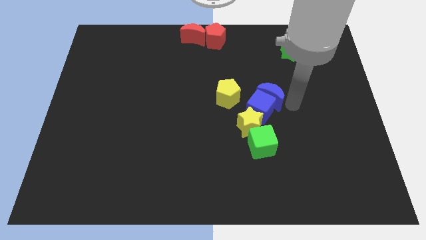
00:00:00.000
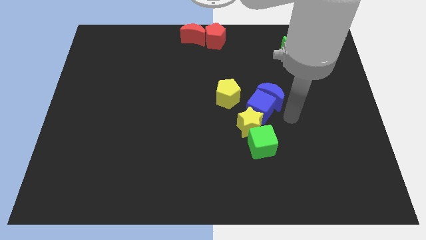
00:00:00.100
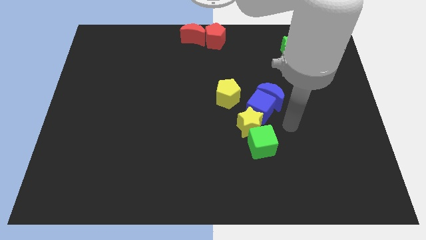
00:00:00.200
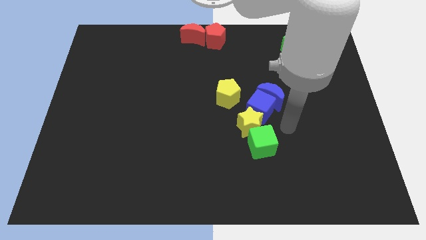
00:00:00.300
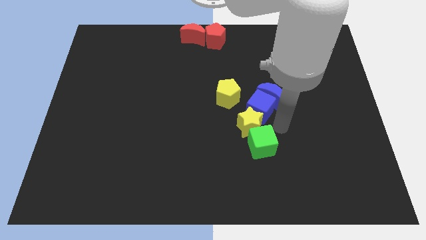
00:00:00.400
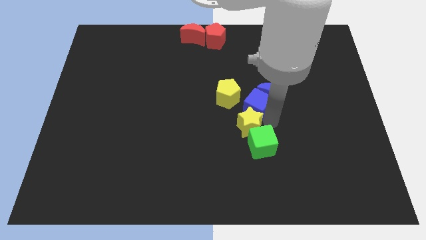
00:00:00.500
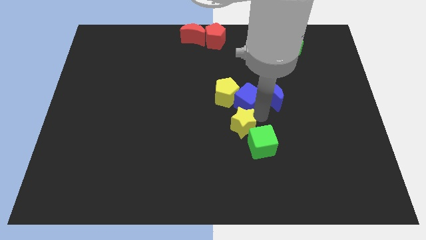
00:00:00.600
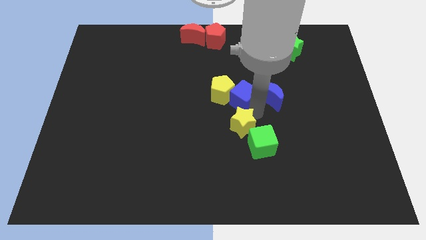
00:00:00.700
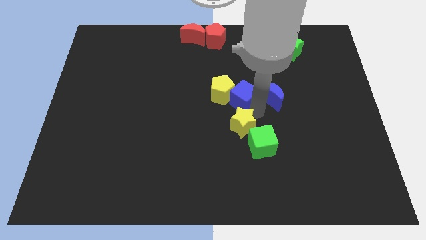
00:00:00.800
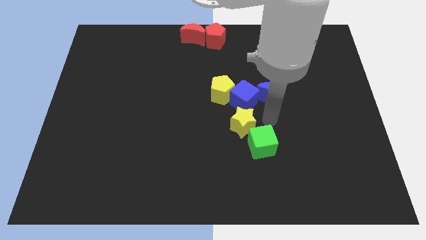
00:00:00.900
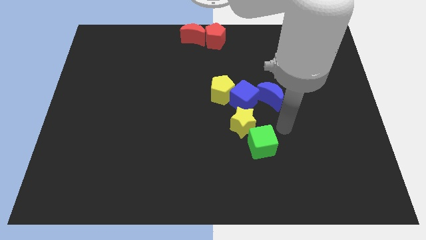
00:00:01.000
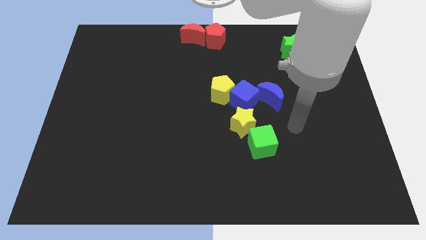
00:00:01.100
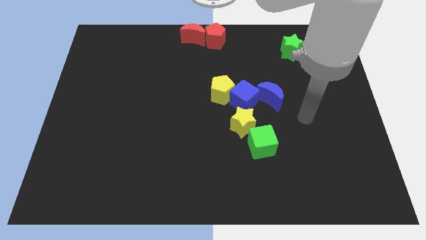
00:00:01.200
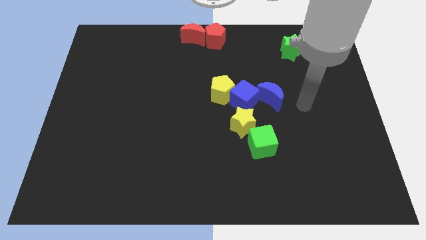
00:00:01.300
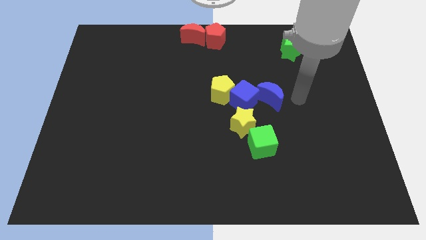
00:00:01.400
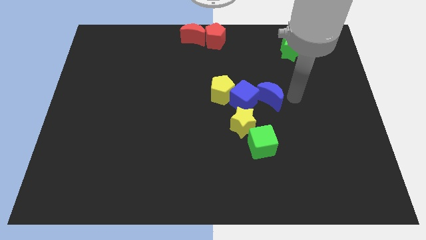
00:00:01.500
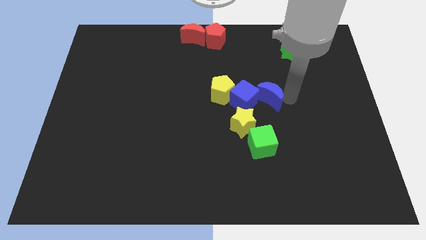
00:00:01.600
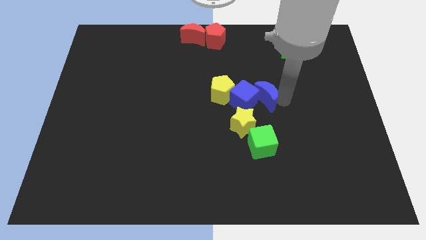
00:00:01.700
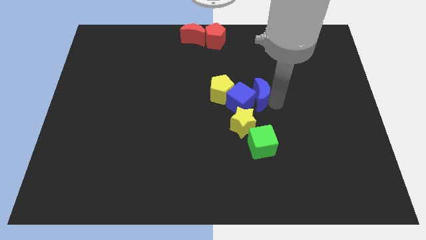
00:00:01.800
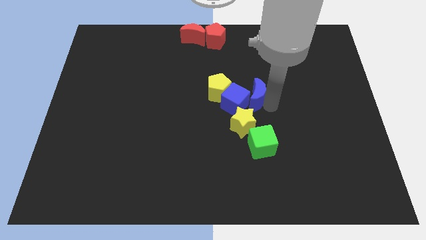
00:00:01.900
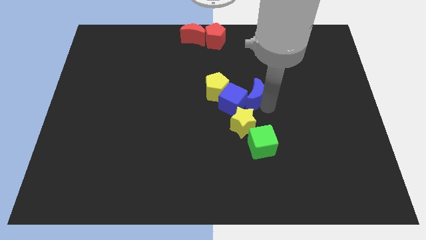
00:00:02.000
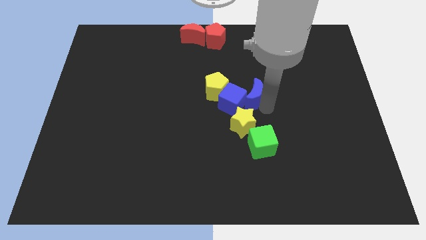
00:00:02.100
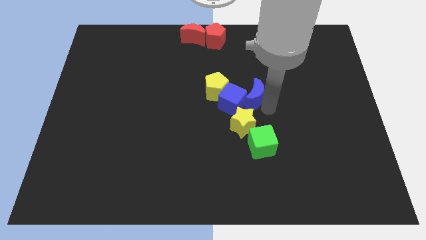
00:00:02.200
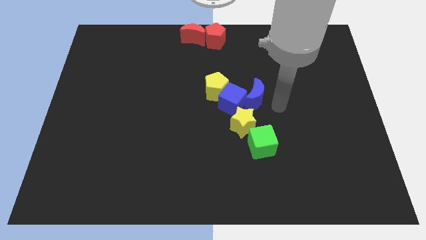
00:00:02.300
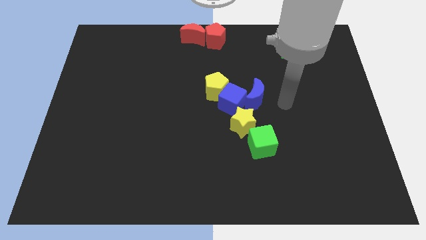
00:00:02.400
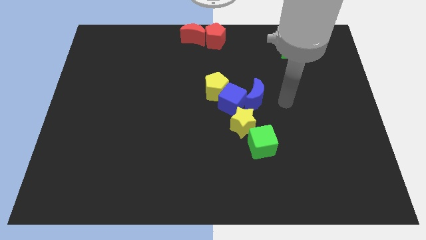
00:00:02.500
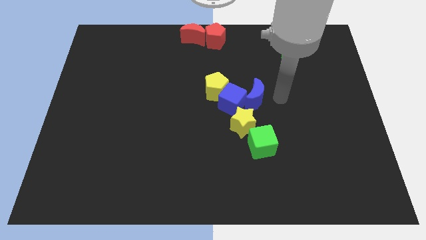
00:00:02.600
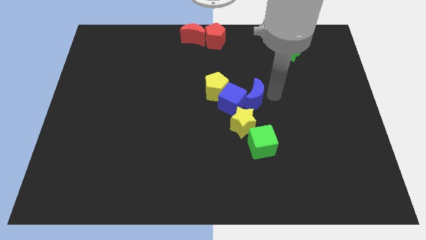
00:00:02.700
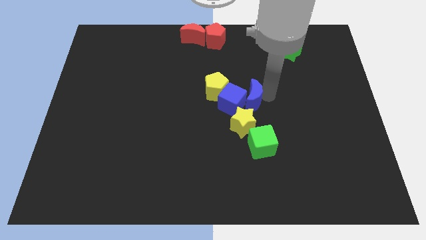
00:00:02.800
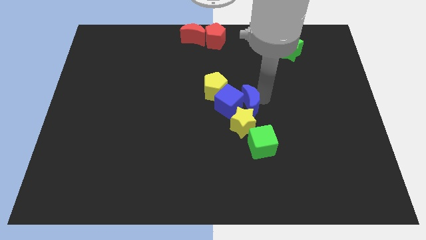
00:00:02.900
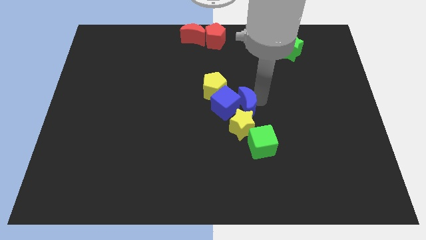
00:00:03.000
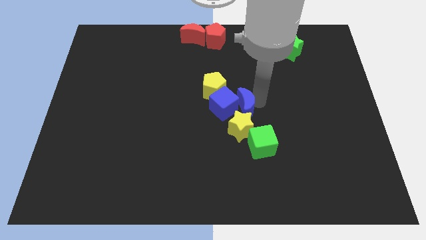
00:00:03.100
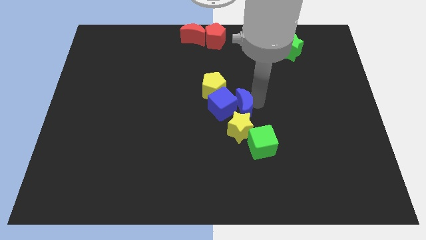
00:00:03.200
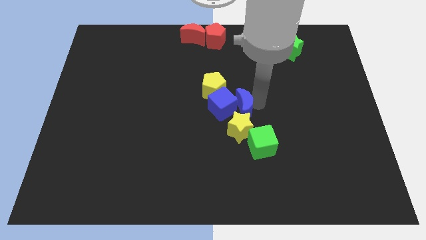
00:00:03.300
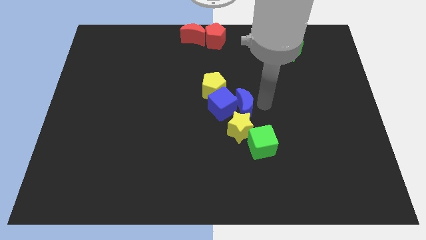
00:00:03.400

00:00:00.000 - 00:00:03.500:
push the blue blocks between the yellow blocks

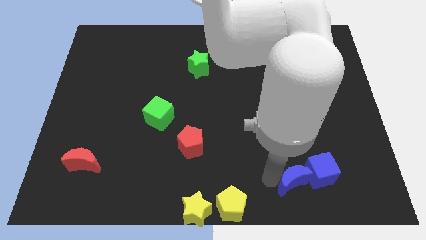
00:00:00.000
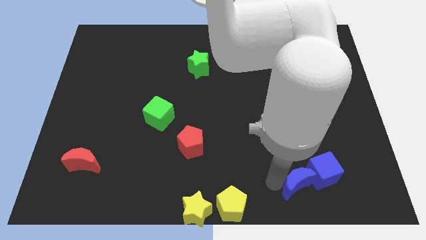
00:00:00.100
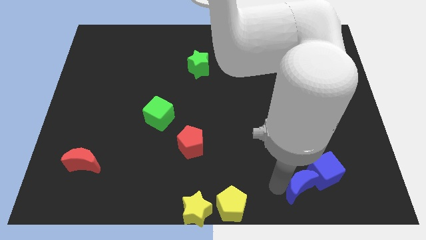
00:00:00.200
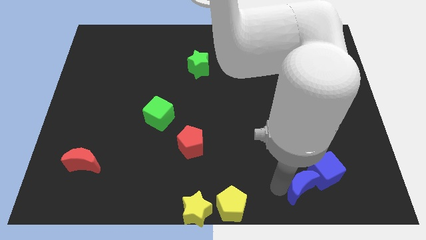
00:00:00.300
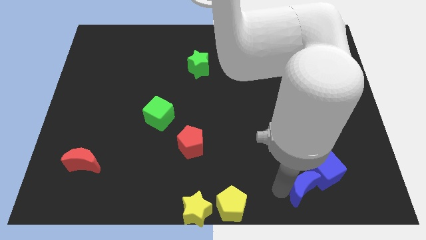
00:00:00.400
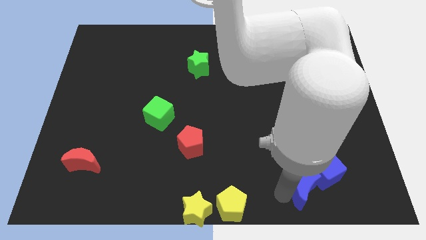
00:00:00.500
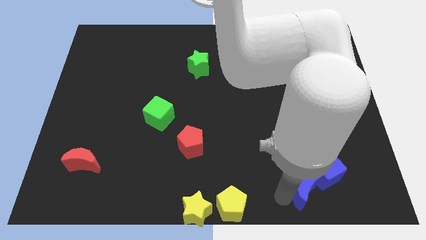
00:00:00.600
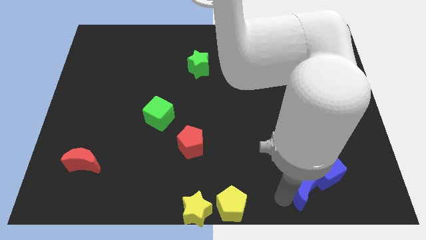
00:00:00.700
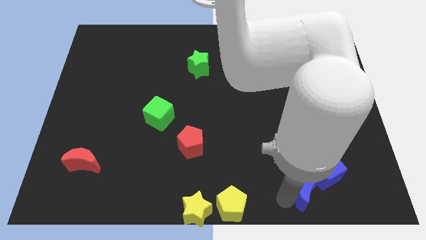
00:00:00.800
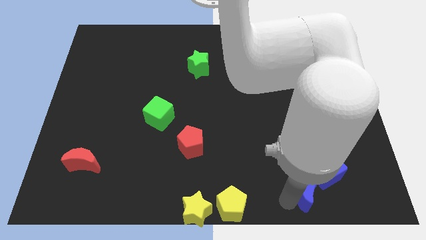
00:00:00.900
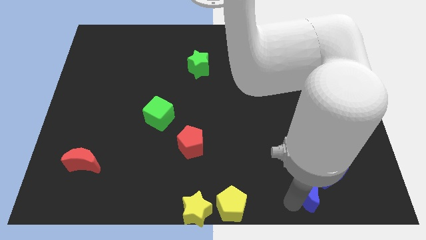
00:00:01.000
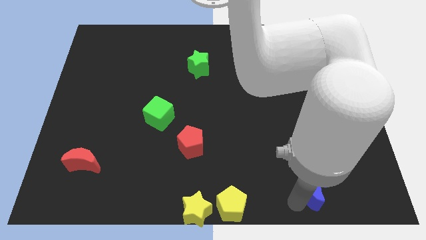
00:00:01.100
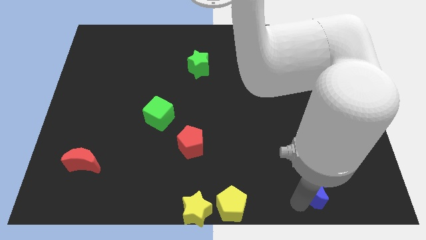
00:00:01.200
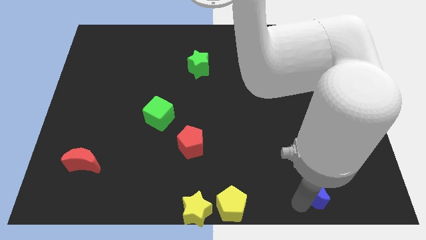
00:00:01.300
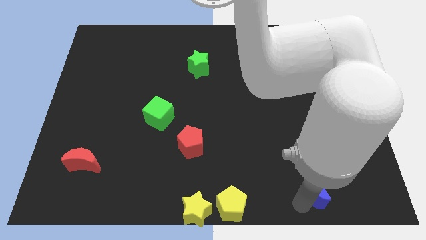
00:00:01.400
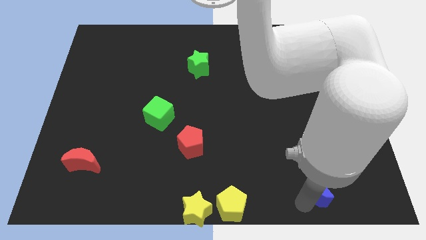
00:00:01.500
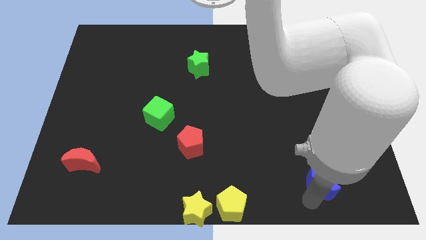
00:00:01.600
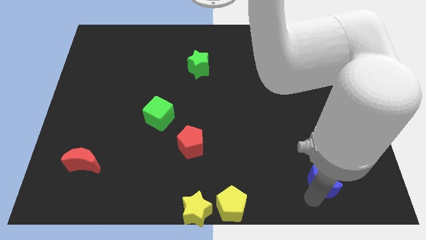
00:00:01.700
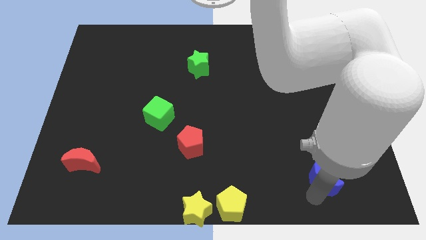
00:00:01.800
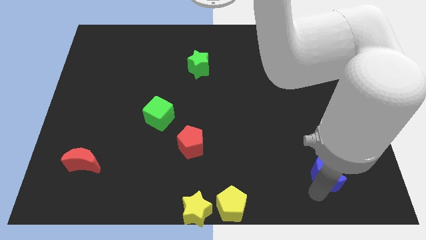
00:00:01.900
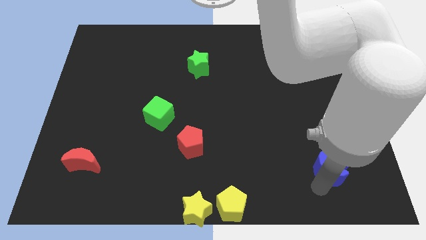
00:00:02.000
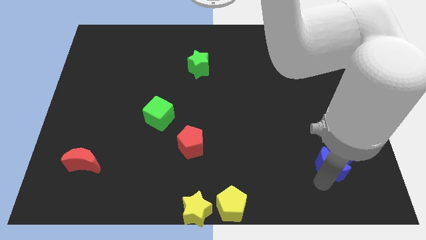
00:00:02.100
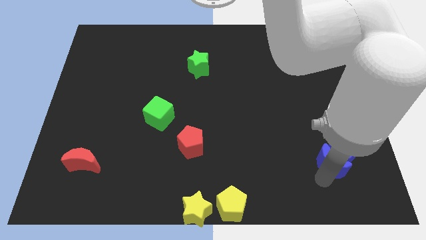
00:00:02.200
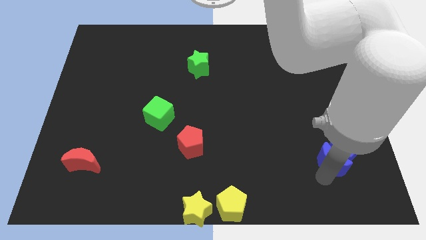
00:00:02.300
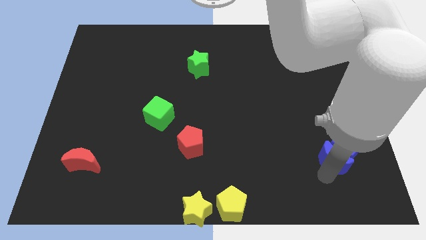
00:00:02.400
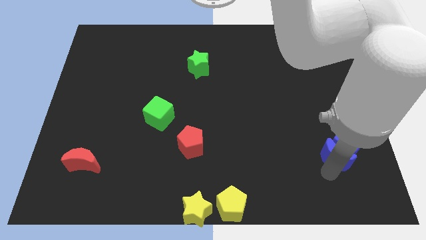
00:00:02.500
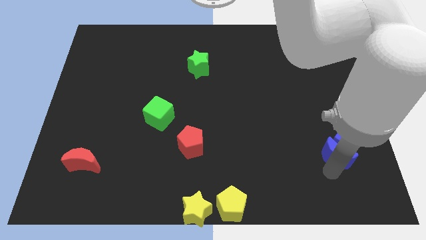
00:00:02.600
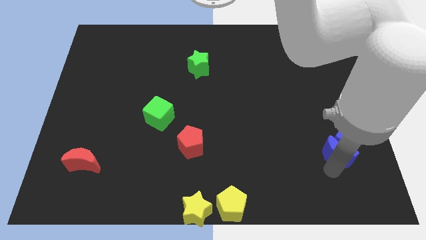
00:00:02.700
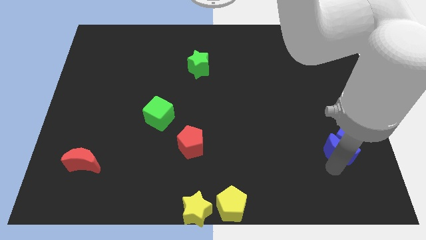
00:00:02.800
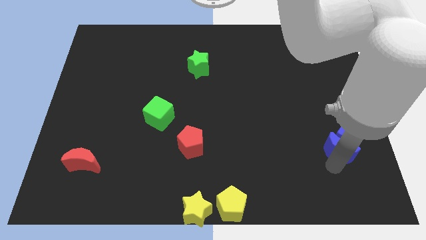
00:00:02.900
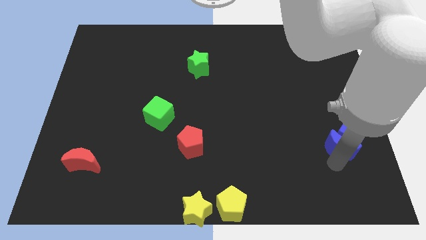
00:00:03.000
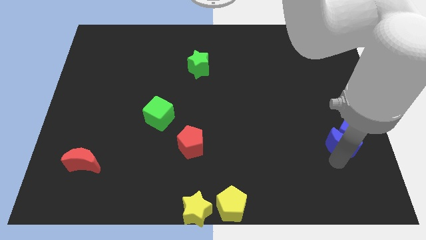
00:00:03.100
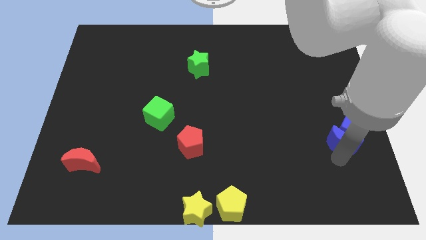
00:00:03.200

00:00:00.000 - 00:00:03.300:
move blue cubes to top right side of the board

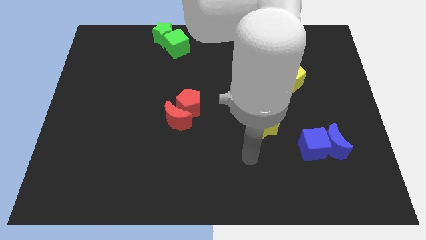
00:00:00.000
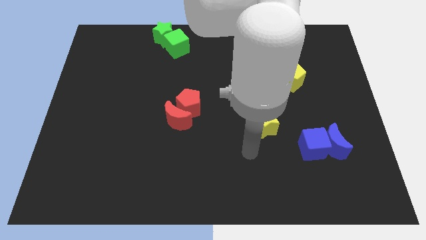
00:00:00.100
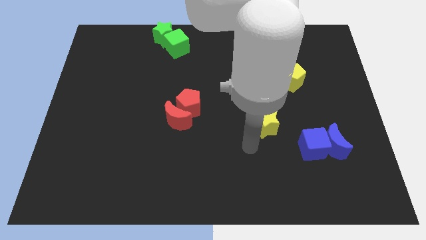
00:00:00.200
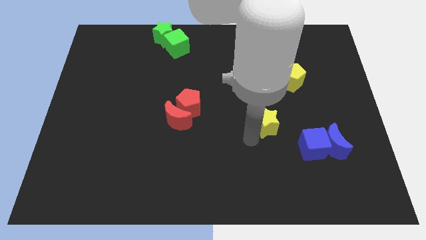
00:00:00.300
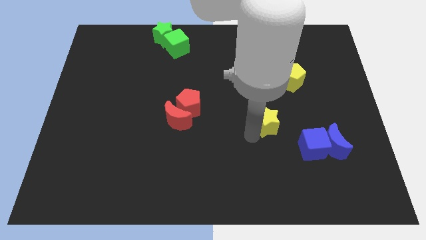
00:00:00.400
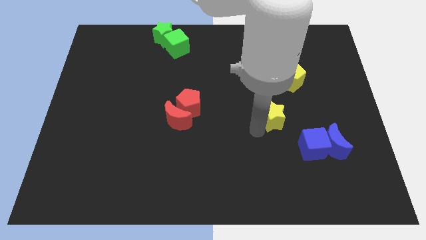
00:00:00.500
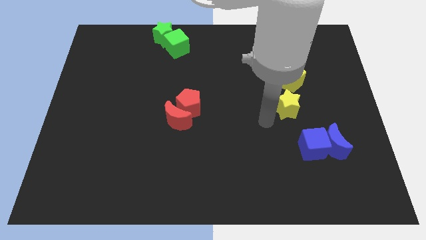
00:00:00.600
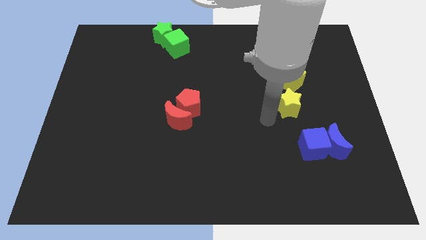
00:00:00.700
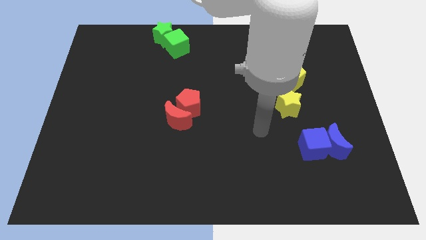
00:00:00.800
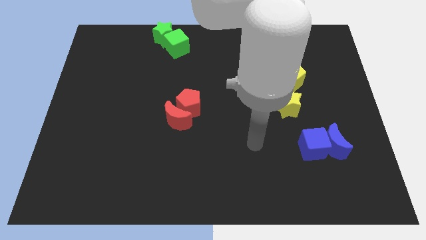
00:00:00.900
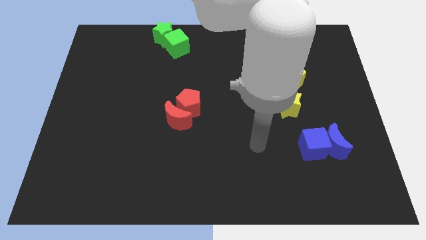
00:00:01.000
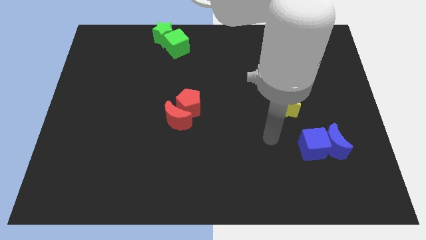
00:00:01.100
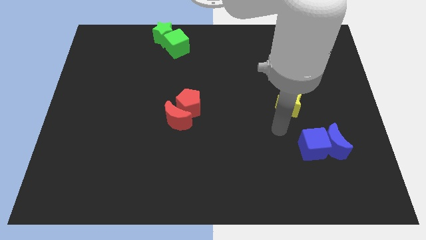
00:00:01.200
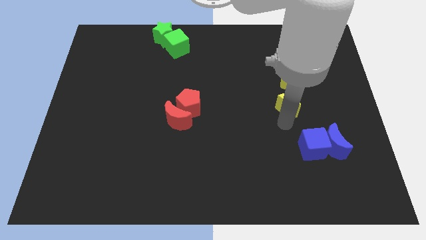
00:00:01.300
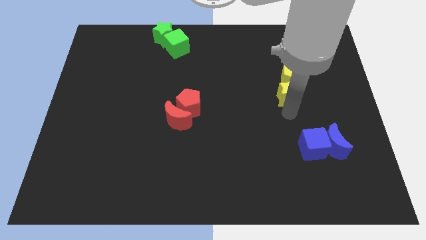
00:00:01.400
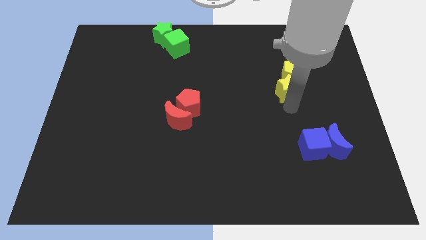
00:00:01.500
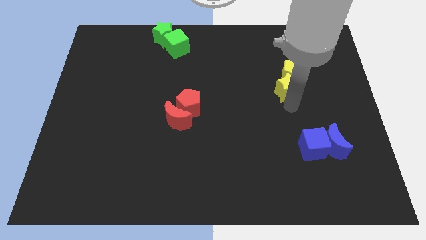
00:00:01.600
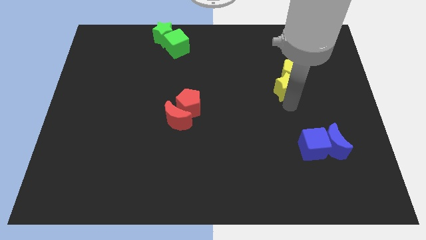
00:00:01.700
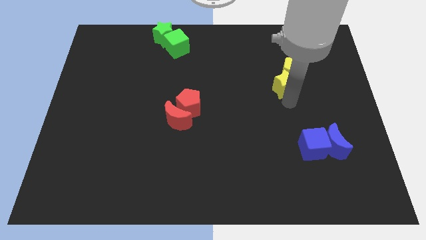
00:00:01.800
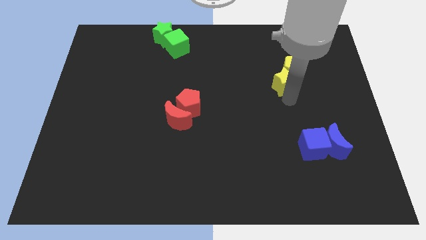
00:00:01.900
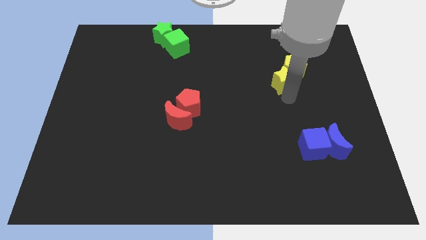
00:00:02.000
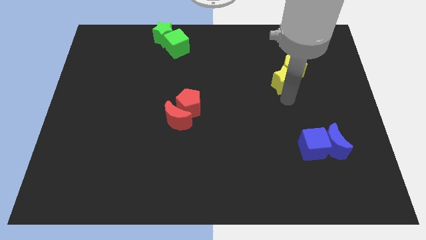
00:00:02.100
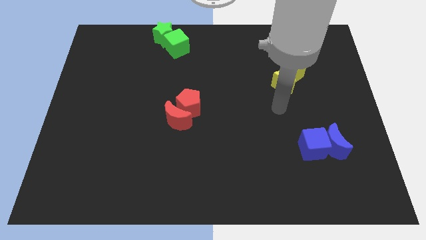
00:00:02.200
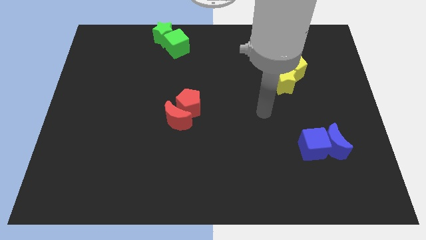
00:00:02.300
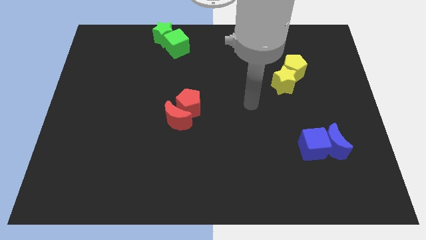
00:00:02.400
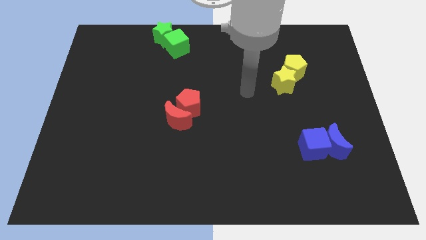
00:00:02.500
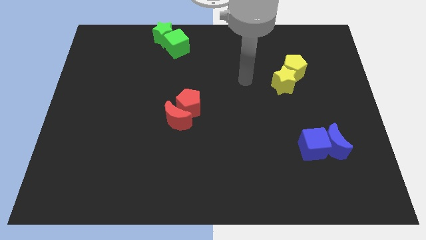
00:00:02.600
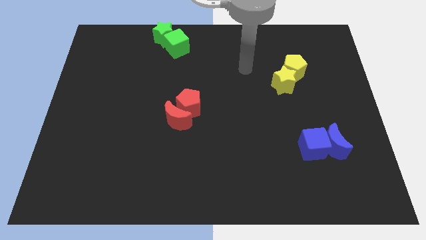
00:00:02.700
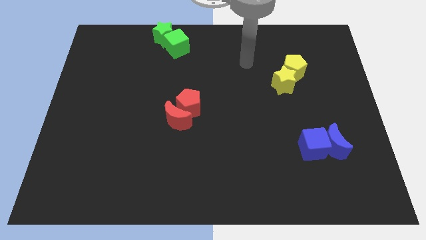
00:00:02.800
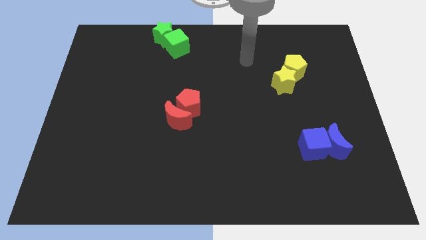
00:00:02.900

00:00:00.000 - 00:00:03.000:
move the yellow star into the yellow pentagon
